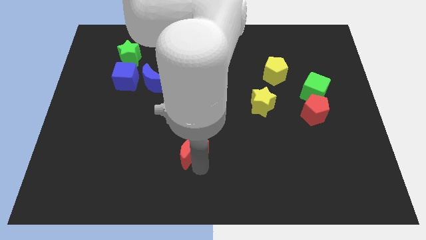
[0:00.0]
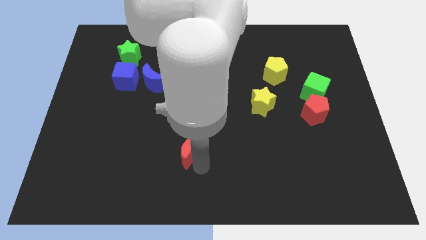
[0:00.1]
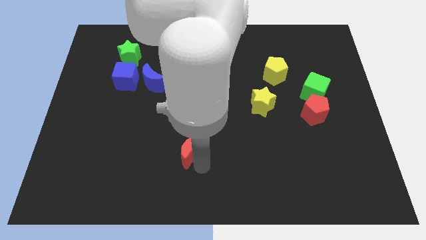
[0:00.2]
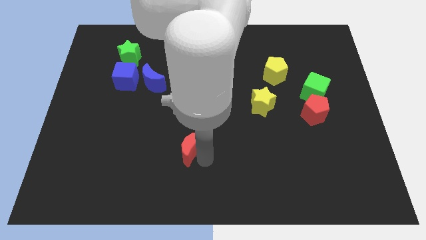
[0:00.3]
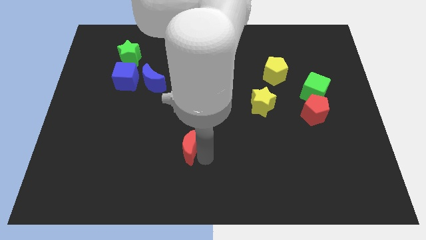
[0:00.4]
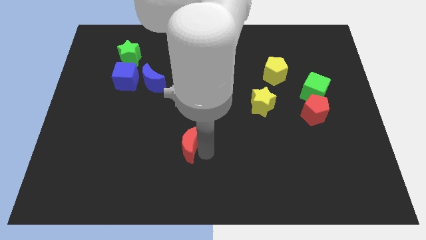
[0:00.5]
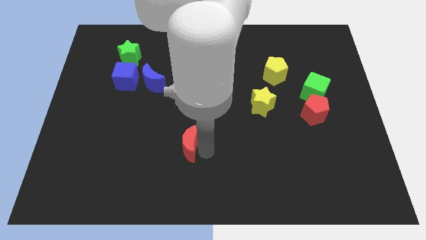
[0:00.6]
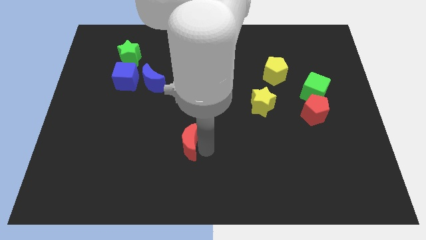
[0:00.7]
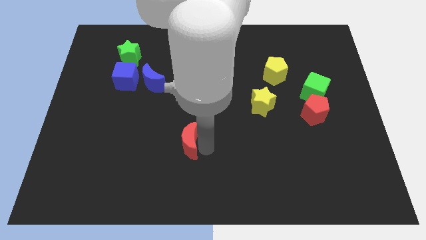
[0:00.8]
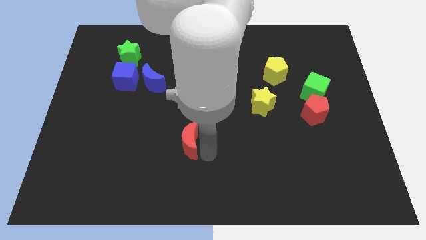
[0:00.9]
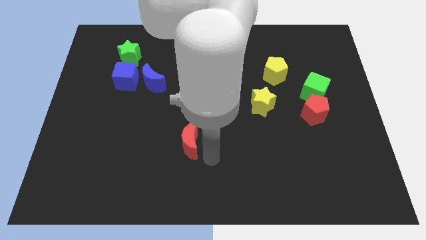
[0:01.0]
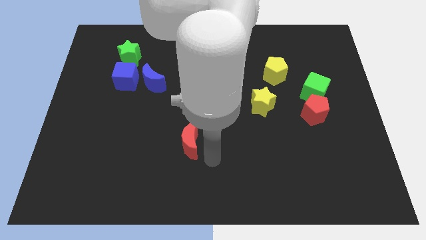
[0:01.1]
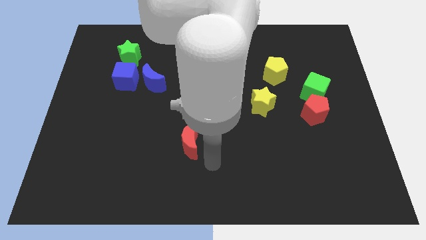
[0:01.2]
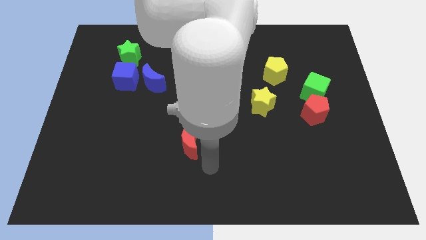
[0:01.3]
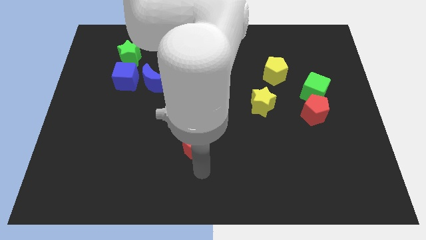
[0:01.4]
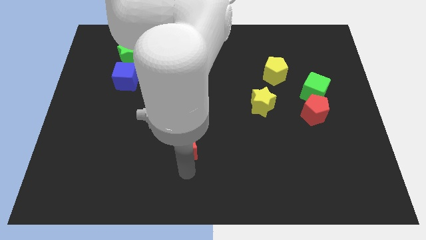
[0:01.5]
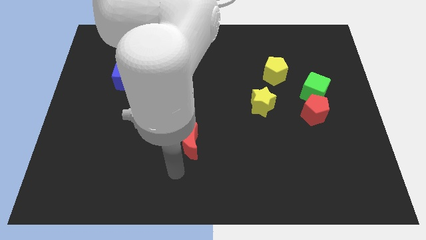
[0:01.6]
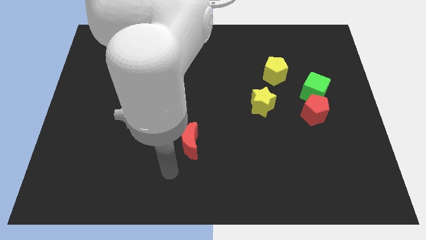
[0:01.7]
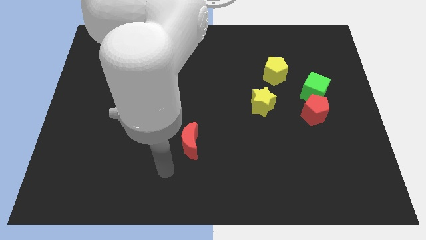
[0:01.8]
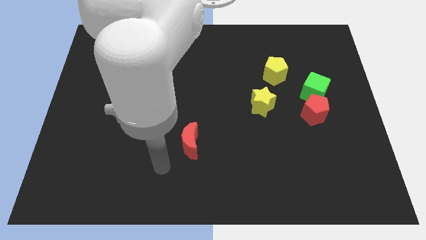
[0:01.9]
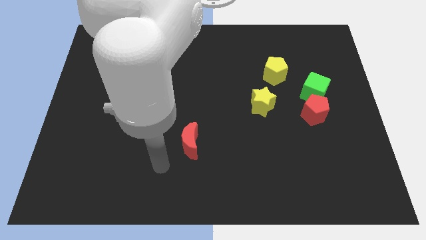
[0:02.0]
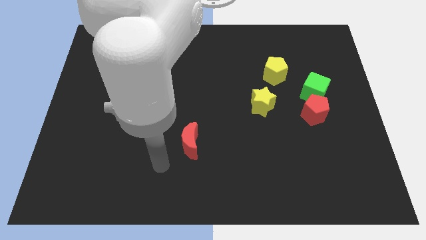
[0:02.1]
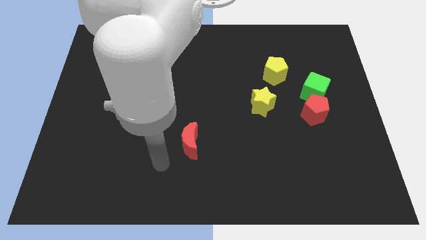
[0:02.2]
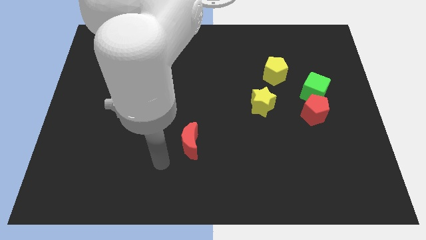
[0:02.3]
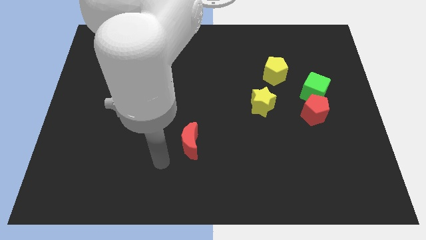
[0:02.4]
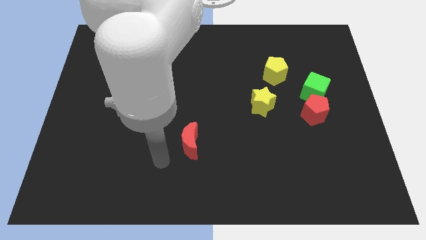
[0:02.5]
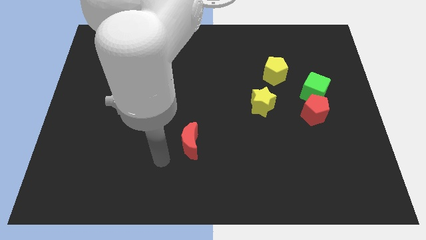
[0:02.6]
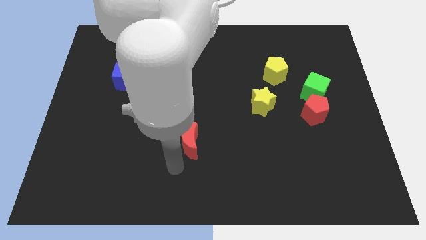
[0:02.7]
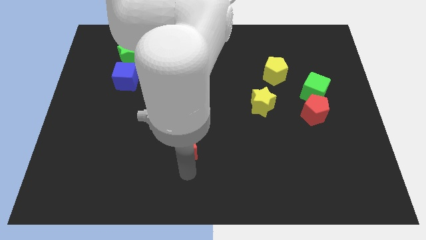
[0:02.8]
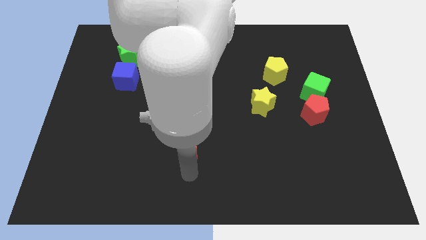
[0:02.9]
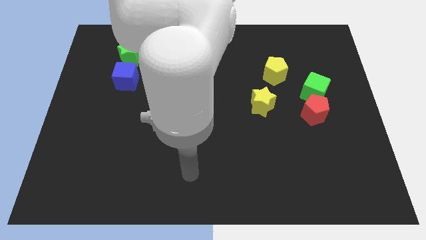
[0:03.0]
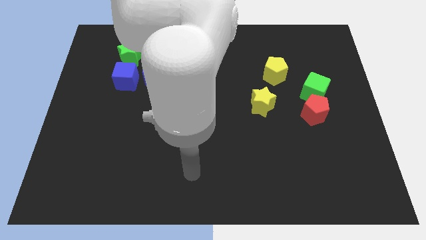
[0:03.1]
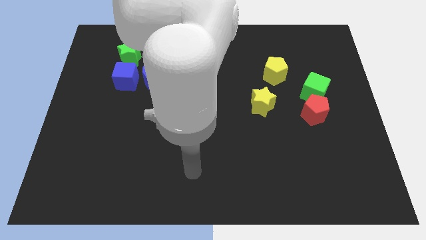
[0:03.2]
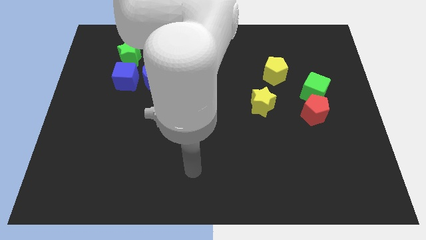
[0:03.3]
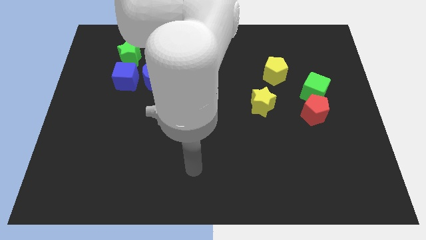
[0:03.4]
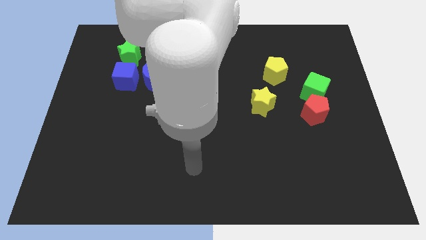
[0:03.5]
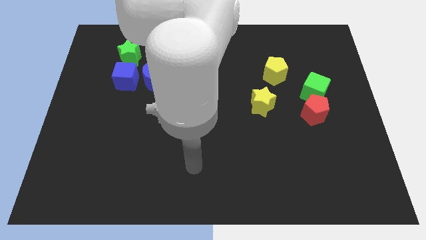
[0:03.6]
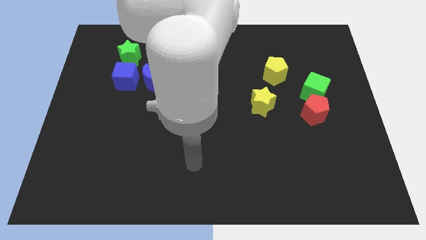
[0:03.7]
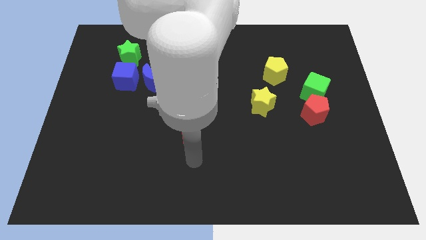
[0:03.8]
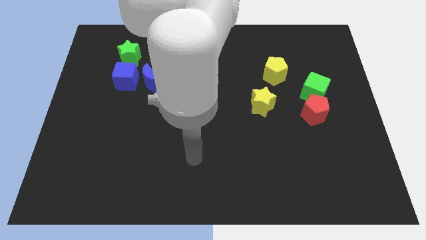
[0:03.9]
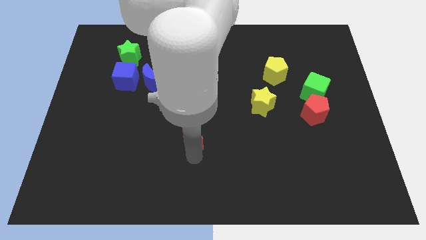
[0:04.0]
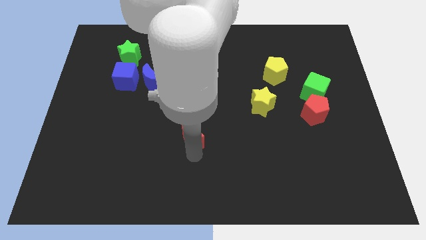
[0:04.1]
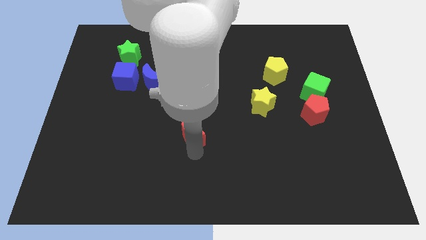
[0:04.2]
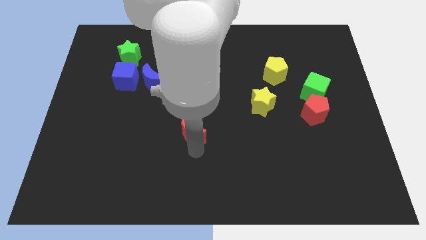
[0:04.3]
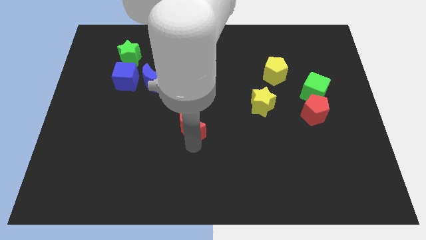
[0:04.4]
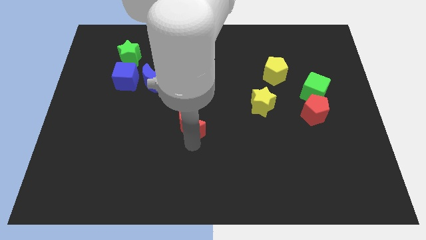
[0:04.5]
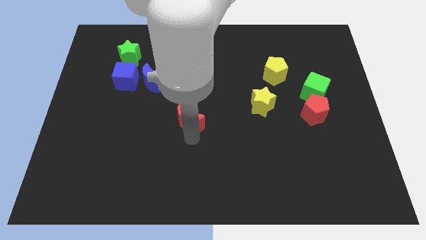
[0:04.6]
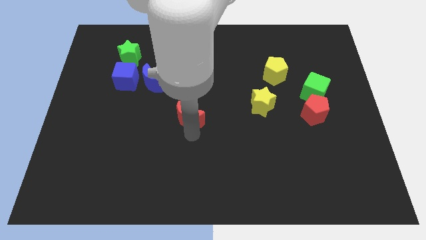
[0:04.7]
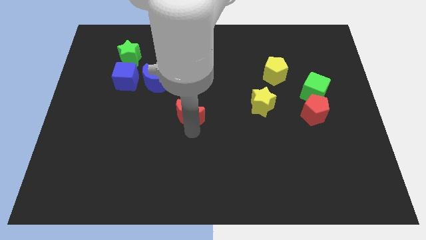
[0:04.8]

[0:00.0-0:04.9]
push red moon towards center of the borad

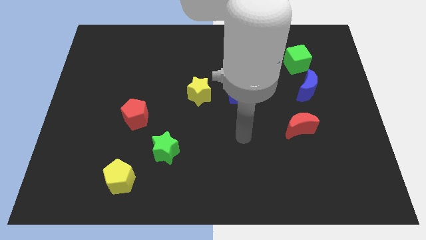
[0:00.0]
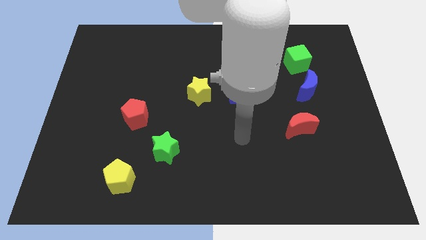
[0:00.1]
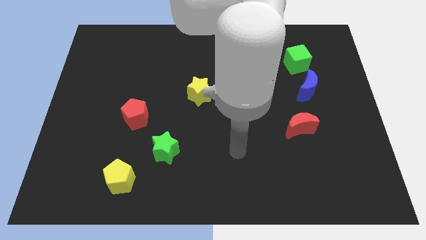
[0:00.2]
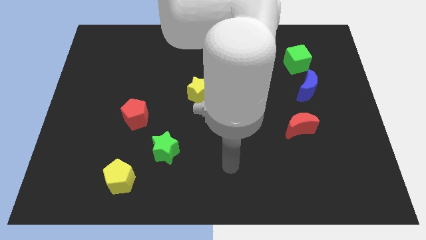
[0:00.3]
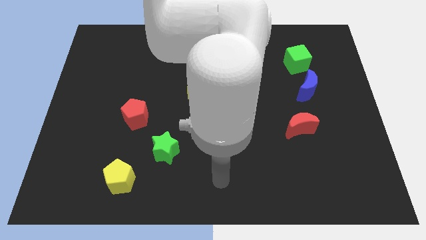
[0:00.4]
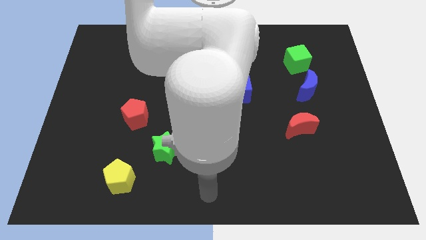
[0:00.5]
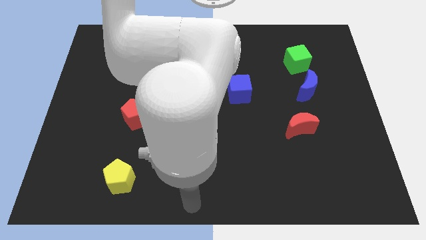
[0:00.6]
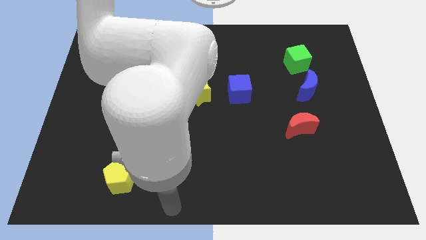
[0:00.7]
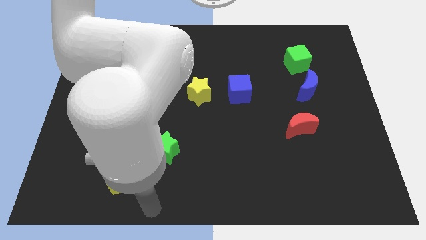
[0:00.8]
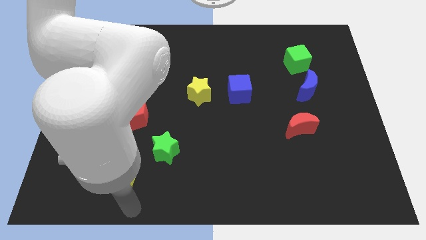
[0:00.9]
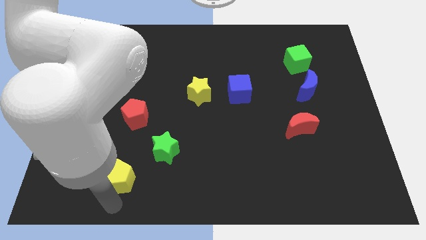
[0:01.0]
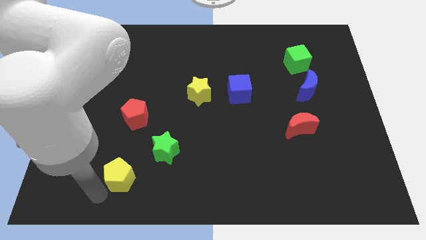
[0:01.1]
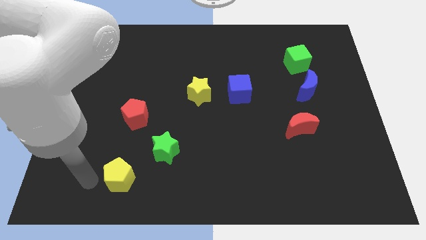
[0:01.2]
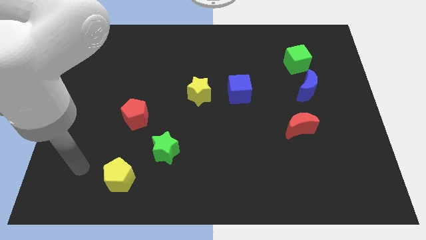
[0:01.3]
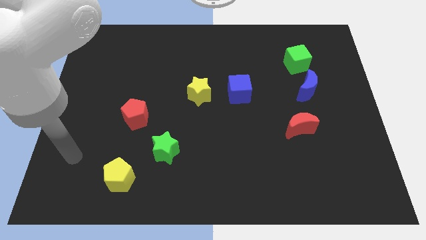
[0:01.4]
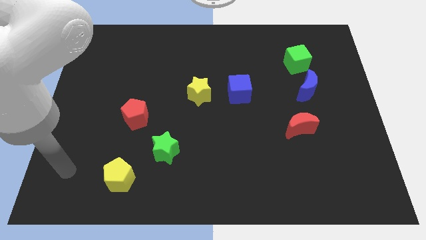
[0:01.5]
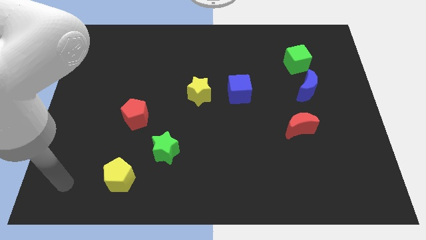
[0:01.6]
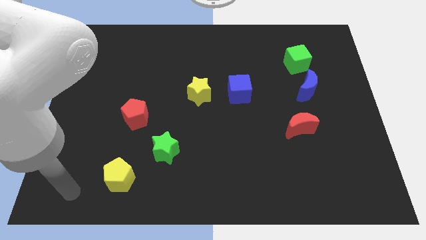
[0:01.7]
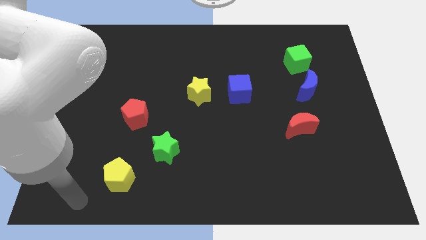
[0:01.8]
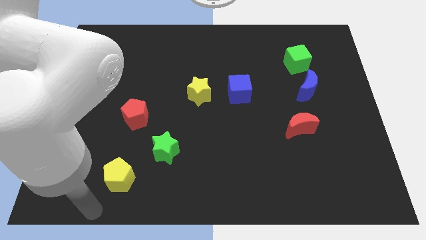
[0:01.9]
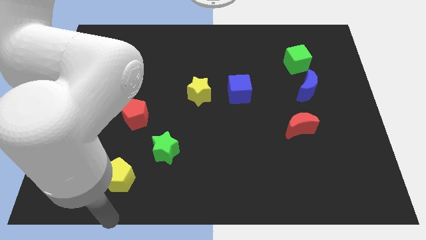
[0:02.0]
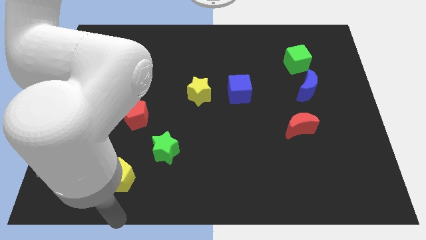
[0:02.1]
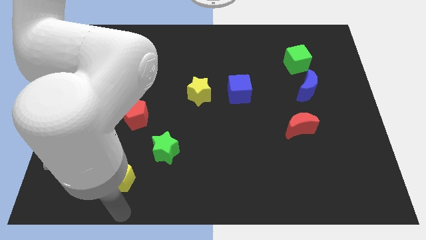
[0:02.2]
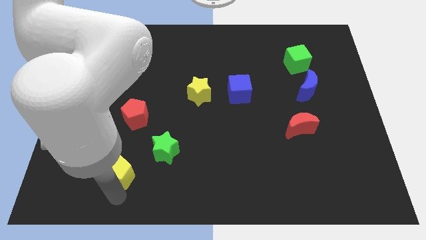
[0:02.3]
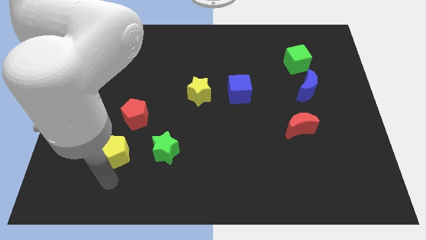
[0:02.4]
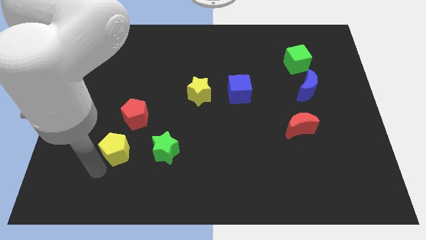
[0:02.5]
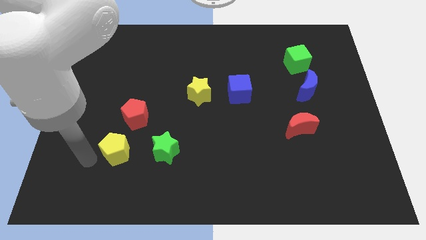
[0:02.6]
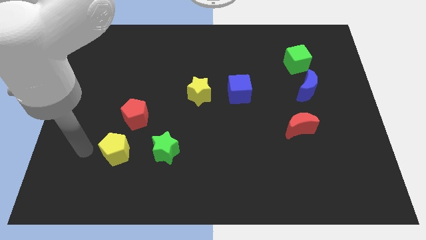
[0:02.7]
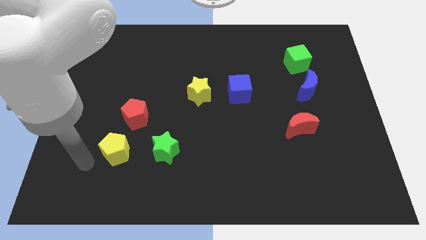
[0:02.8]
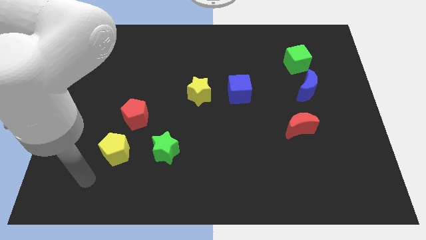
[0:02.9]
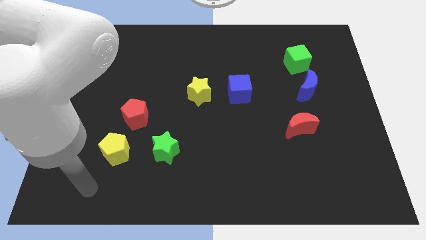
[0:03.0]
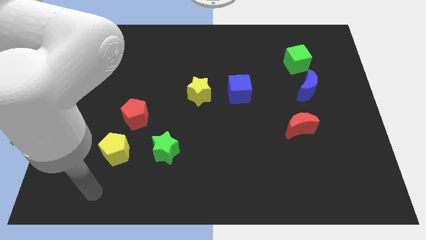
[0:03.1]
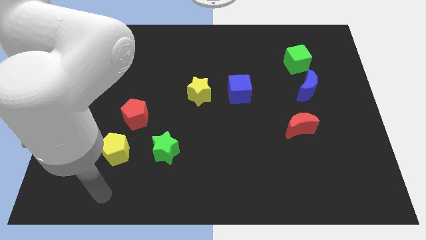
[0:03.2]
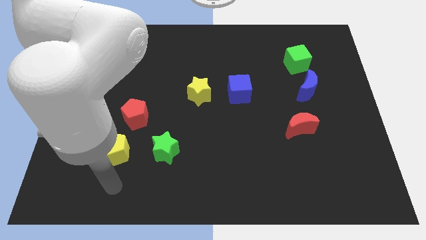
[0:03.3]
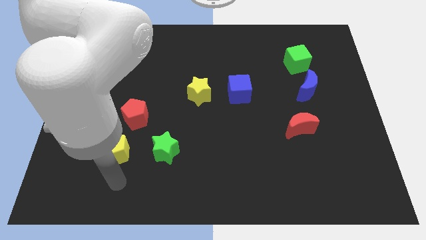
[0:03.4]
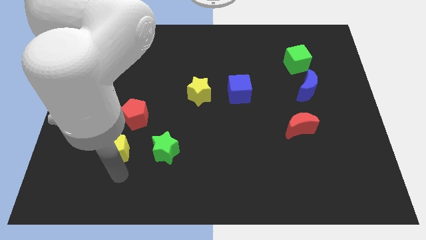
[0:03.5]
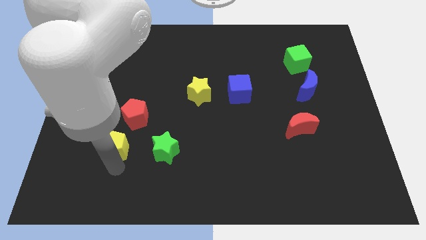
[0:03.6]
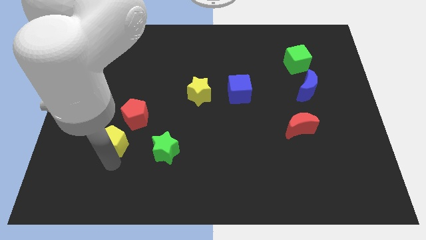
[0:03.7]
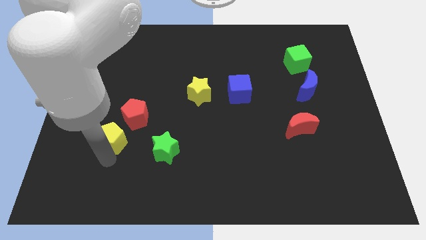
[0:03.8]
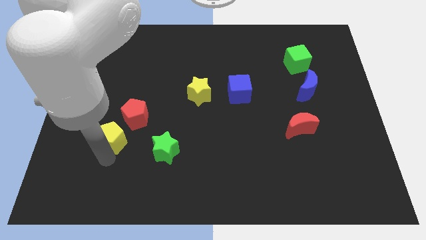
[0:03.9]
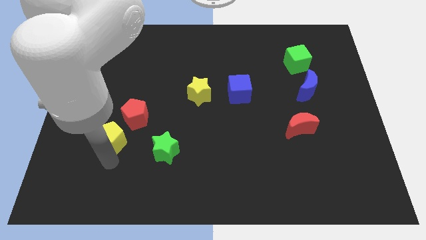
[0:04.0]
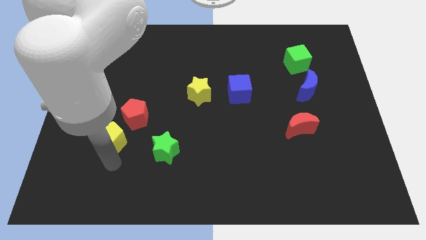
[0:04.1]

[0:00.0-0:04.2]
move the yellow pentagon to the top of the board
